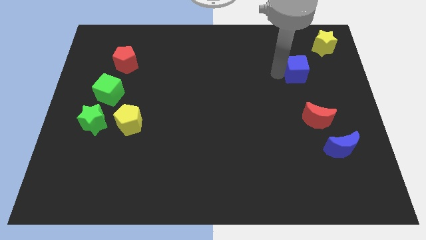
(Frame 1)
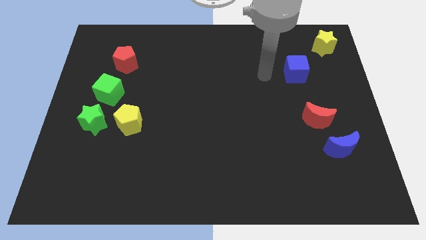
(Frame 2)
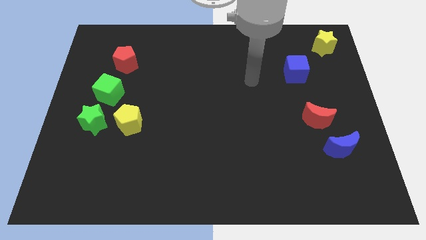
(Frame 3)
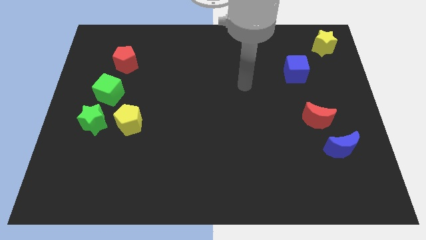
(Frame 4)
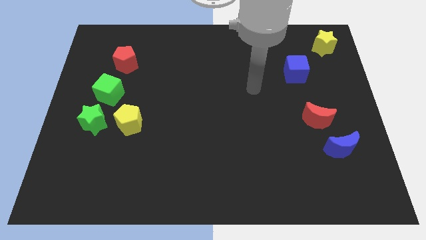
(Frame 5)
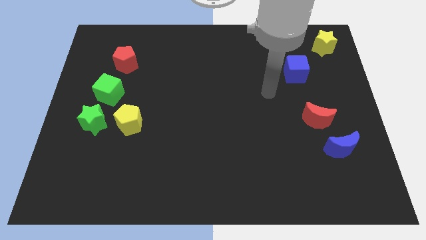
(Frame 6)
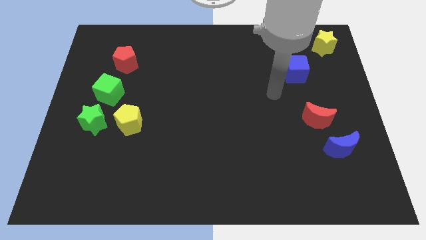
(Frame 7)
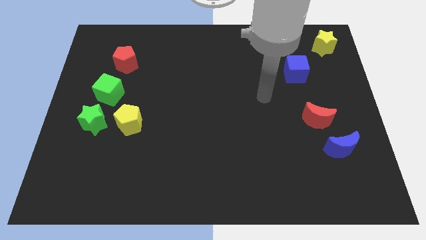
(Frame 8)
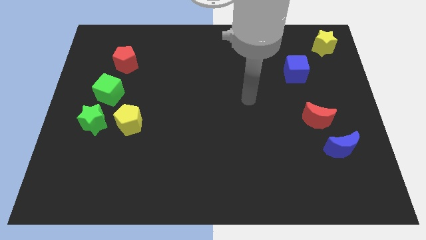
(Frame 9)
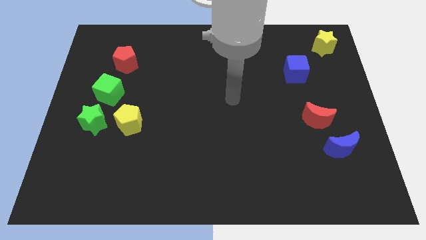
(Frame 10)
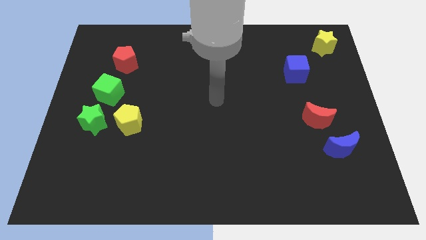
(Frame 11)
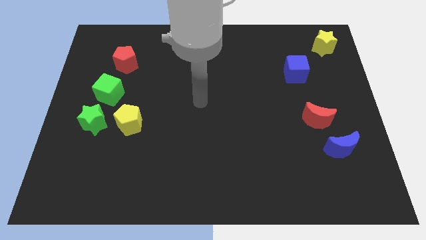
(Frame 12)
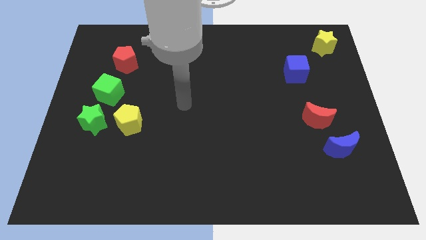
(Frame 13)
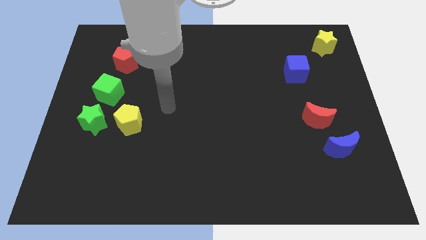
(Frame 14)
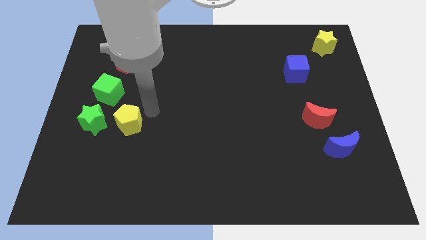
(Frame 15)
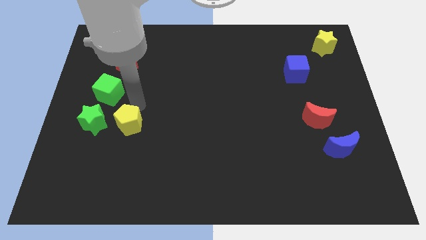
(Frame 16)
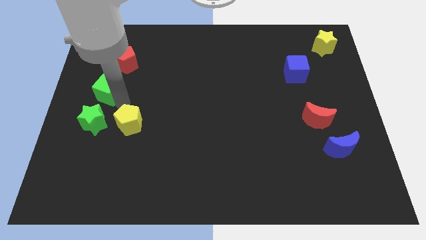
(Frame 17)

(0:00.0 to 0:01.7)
move your hand away from the blue cube

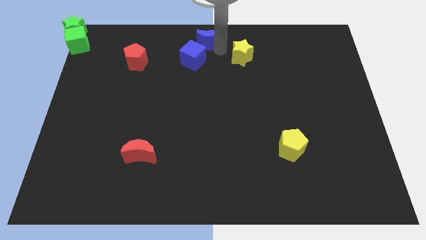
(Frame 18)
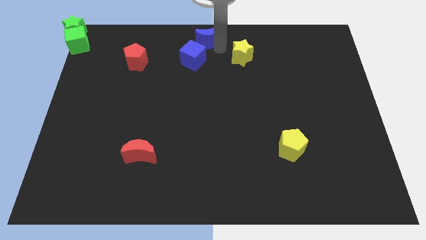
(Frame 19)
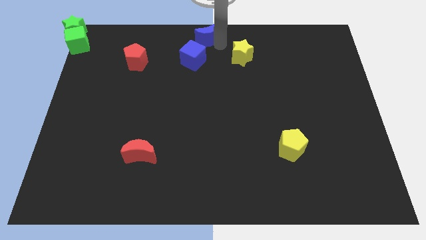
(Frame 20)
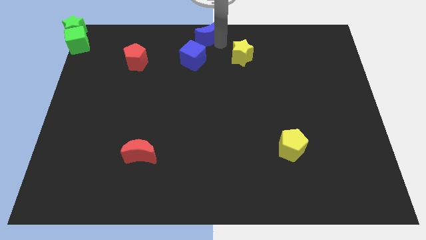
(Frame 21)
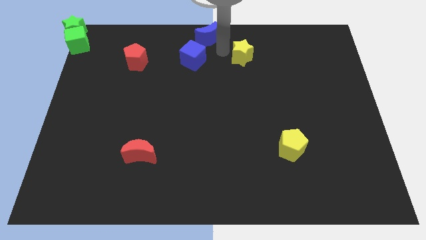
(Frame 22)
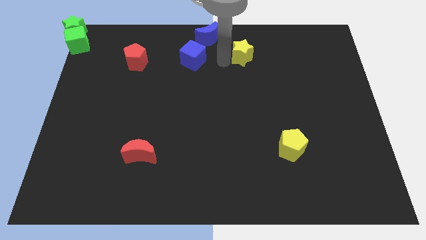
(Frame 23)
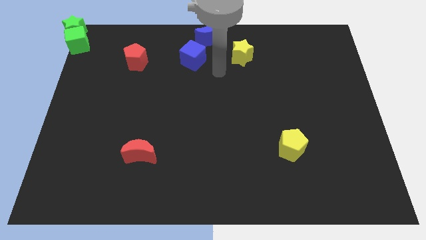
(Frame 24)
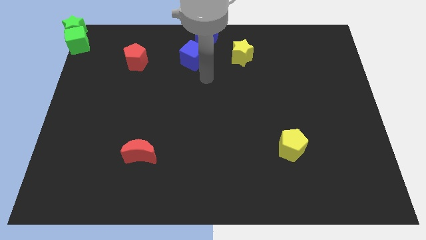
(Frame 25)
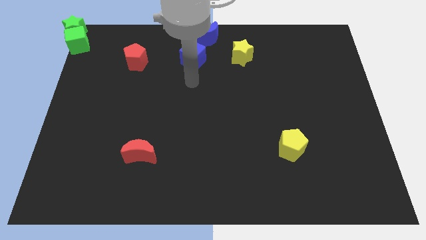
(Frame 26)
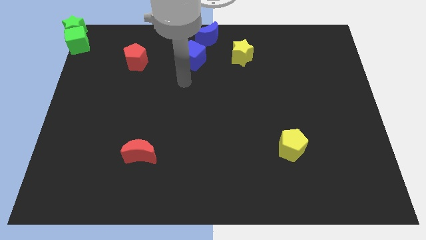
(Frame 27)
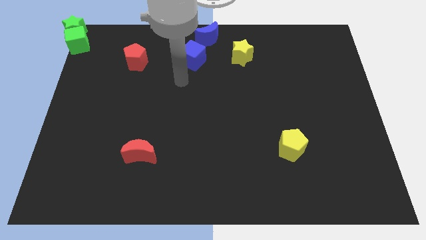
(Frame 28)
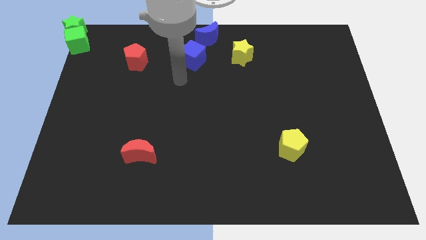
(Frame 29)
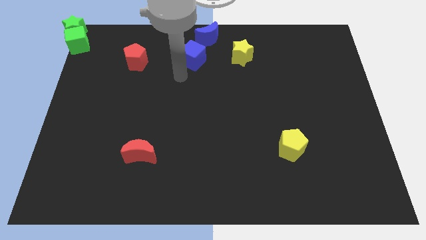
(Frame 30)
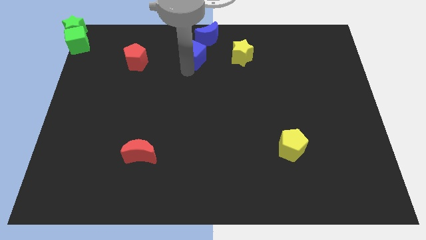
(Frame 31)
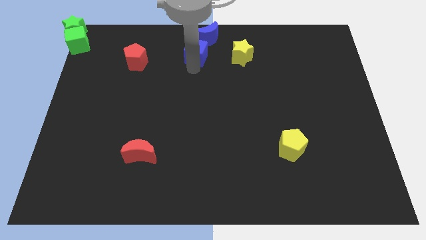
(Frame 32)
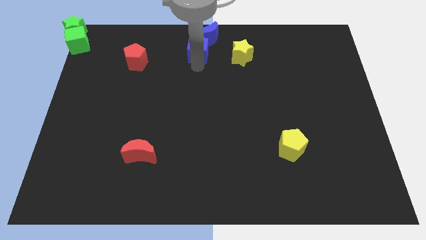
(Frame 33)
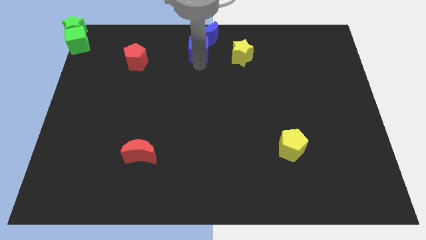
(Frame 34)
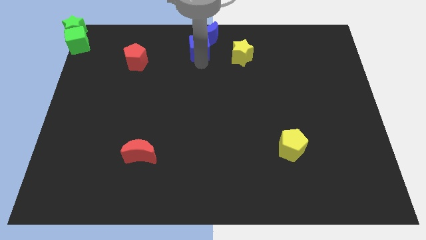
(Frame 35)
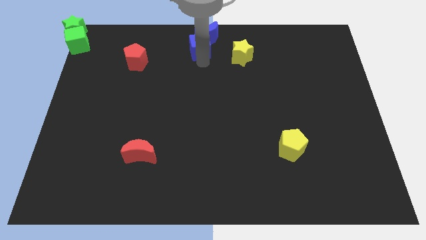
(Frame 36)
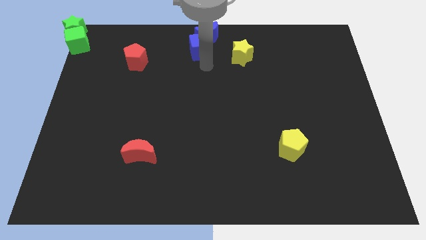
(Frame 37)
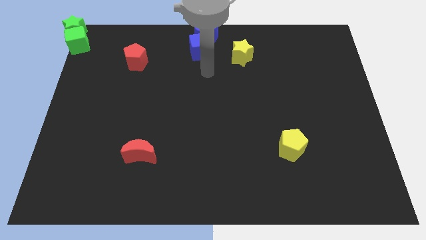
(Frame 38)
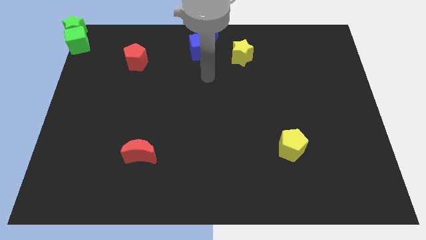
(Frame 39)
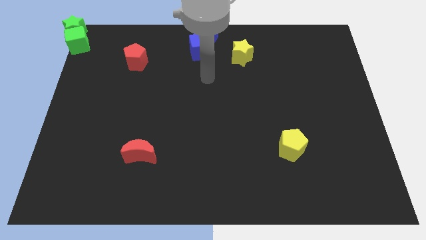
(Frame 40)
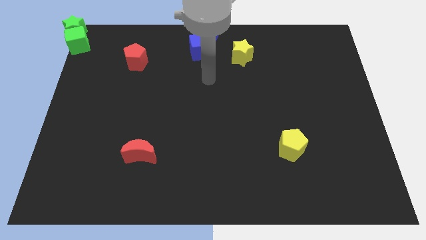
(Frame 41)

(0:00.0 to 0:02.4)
place the blue blocks at the top center

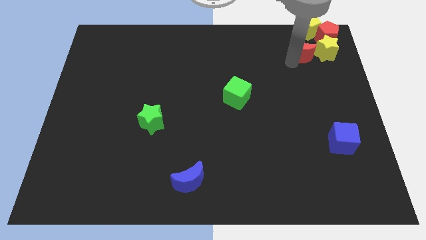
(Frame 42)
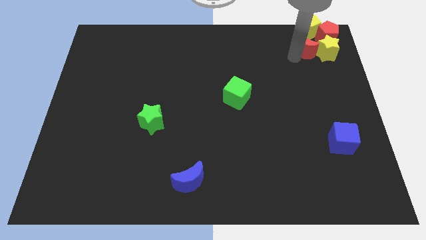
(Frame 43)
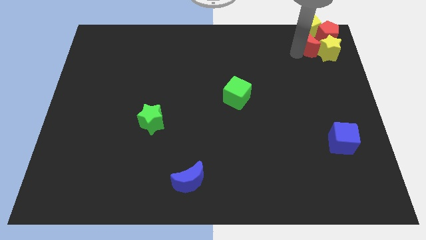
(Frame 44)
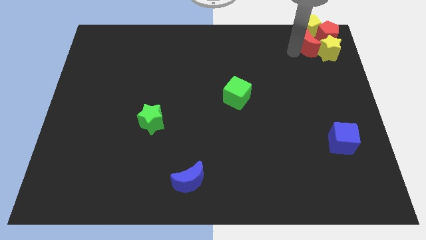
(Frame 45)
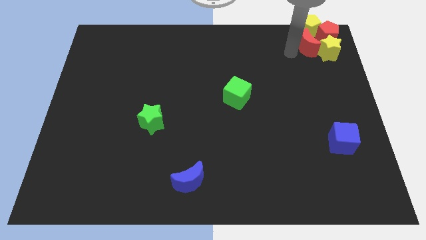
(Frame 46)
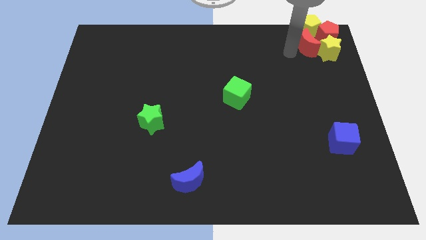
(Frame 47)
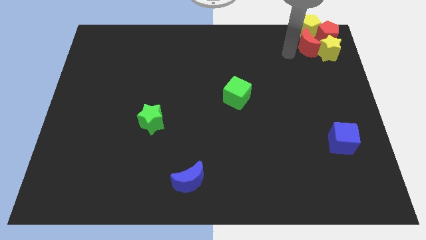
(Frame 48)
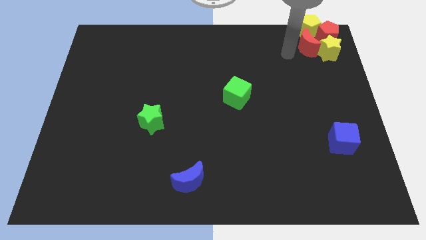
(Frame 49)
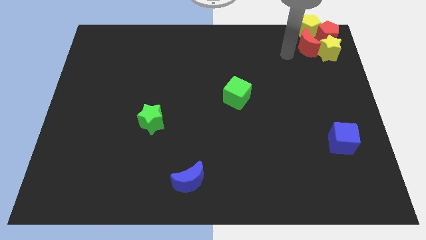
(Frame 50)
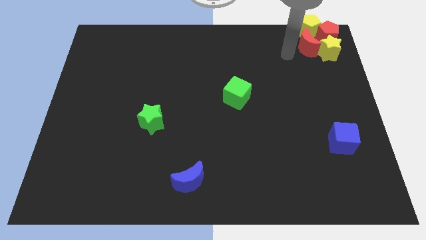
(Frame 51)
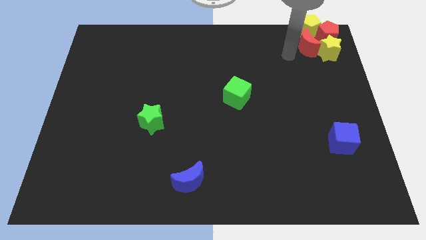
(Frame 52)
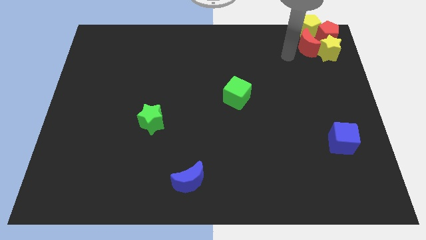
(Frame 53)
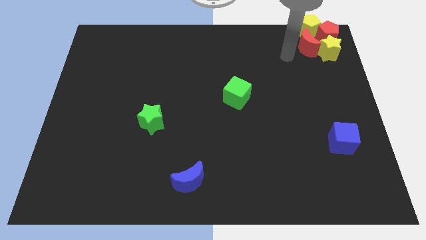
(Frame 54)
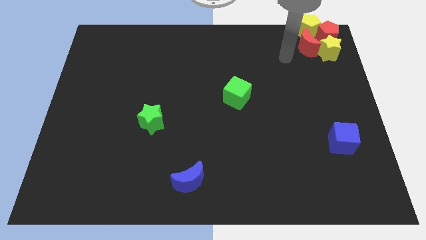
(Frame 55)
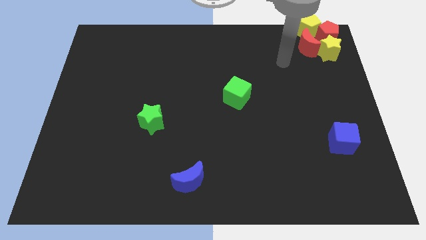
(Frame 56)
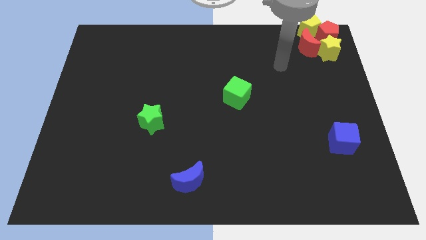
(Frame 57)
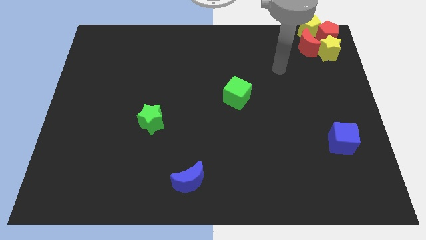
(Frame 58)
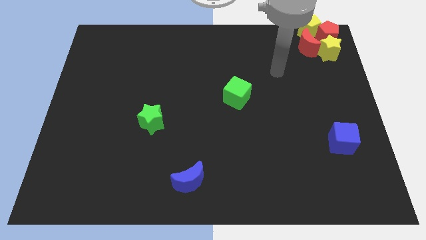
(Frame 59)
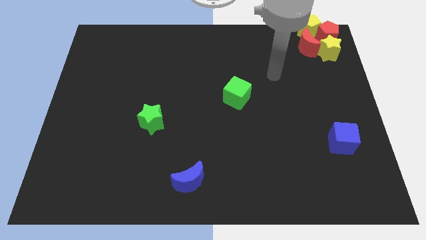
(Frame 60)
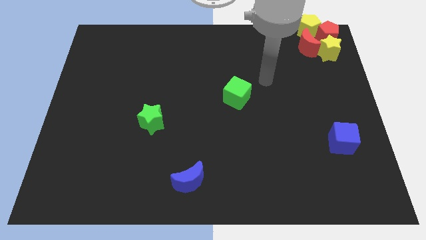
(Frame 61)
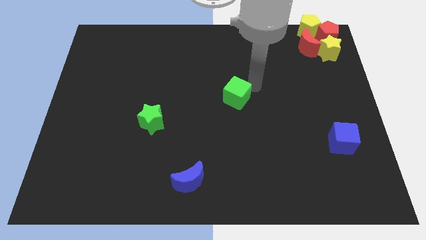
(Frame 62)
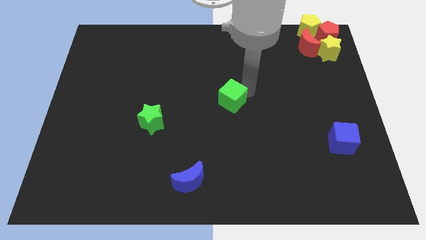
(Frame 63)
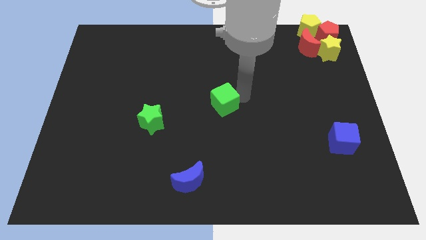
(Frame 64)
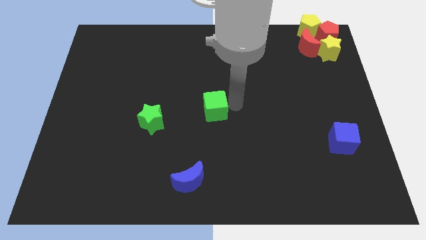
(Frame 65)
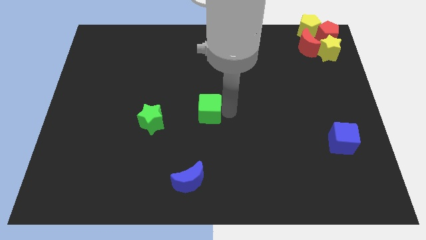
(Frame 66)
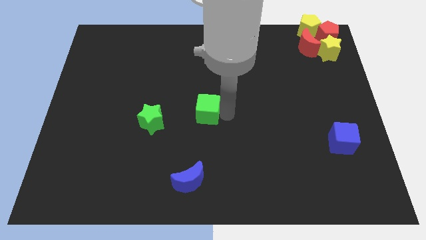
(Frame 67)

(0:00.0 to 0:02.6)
place the green cube at the center of the board

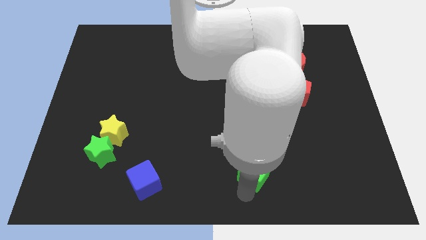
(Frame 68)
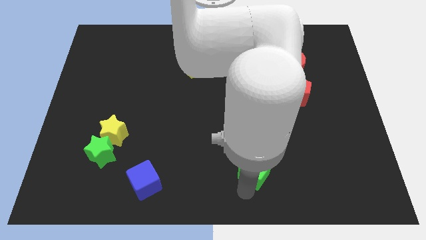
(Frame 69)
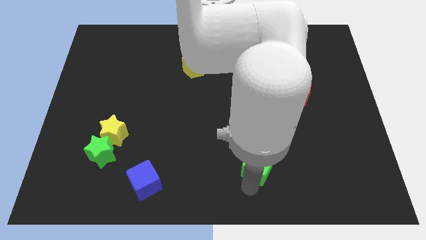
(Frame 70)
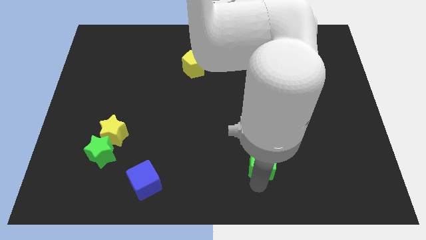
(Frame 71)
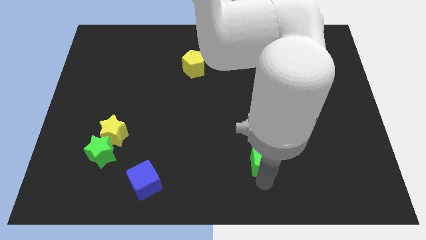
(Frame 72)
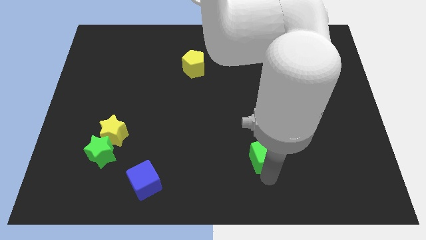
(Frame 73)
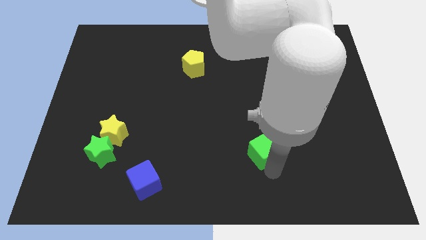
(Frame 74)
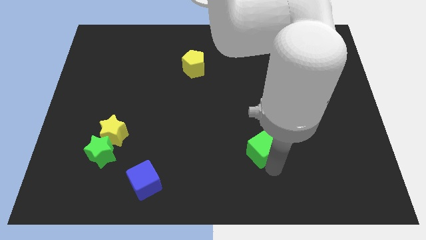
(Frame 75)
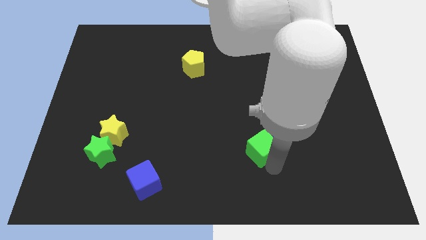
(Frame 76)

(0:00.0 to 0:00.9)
move the green cube below into the blue moon

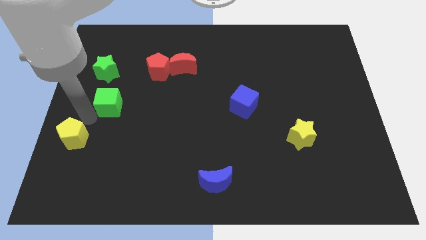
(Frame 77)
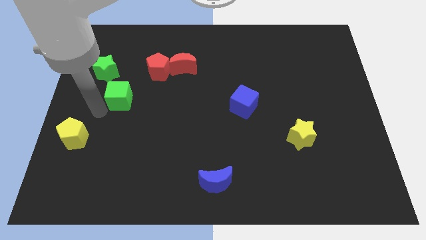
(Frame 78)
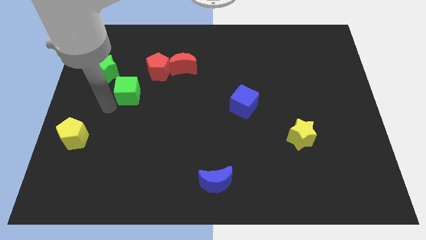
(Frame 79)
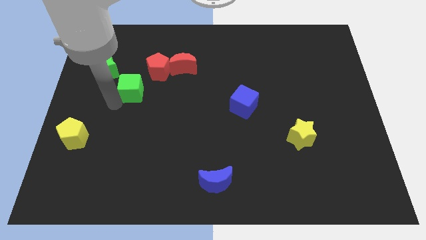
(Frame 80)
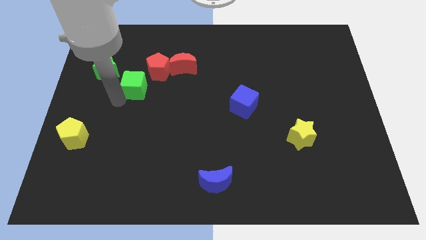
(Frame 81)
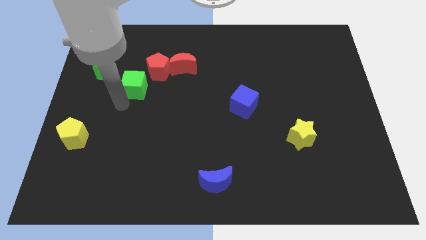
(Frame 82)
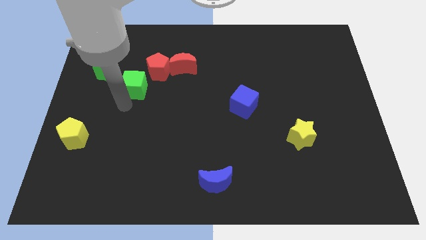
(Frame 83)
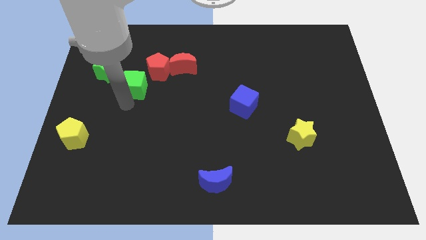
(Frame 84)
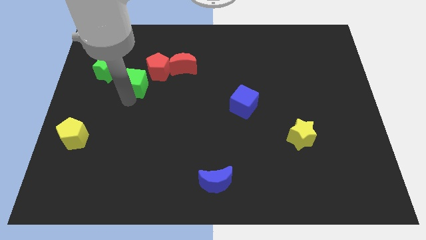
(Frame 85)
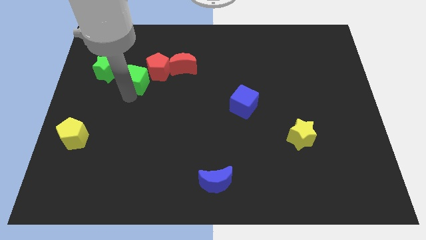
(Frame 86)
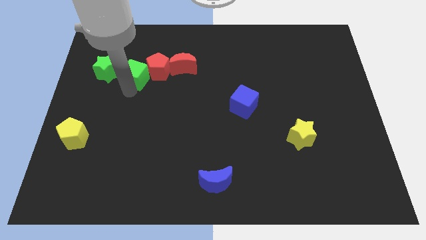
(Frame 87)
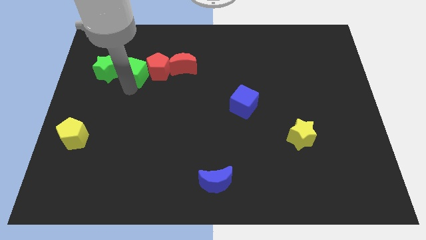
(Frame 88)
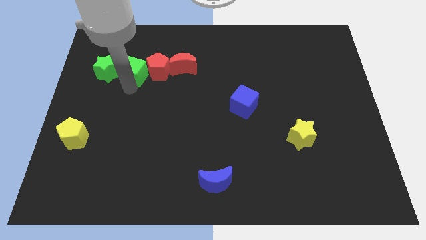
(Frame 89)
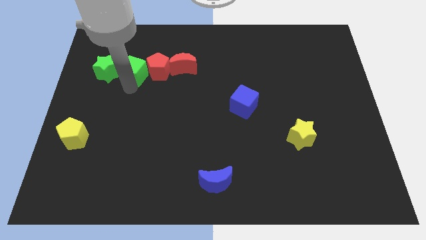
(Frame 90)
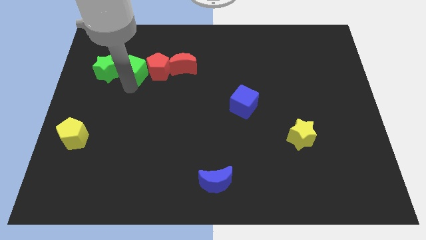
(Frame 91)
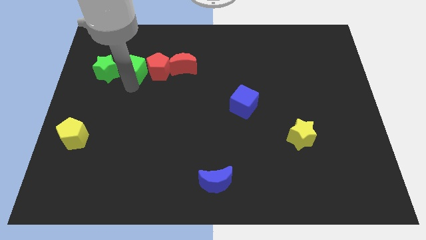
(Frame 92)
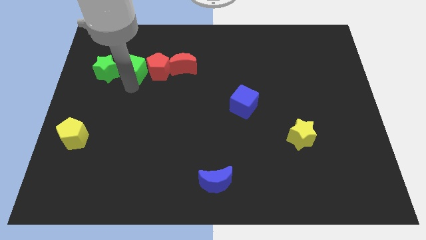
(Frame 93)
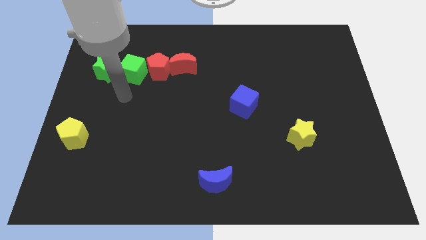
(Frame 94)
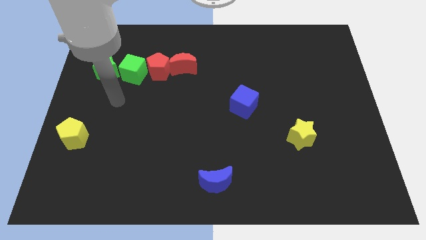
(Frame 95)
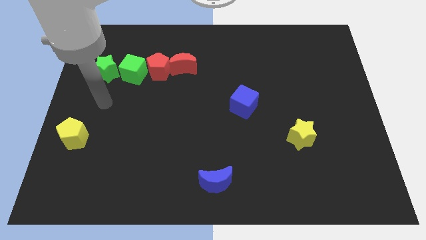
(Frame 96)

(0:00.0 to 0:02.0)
move the green cube in between red pentagon and green star
